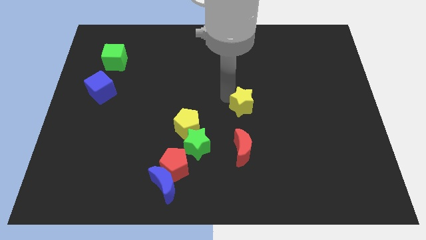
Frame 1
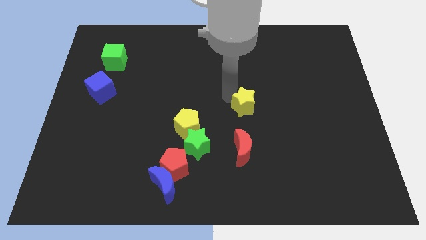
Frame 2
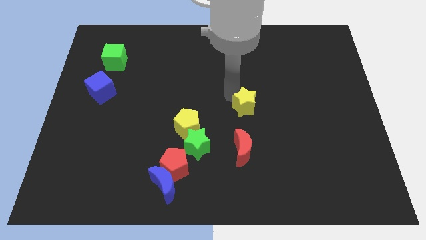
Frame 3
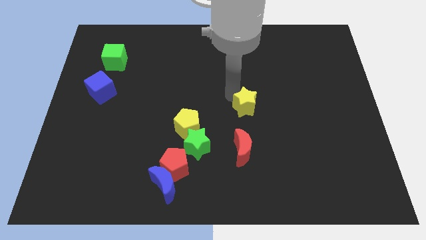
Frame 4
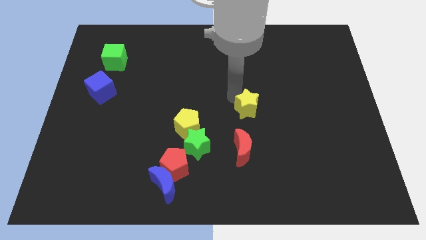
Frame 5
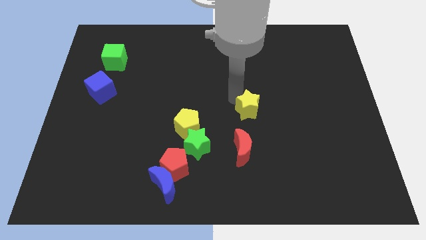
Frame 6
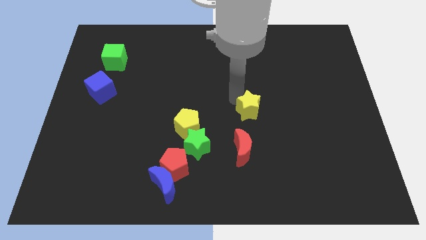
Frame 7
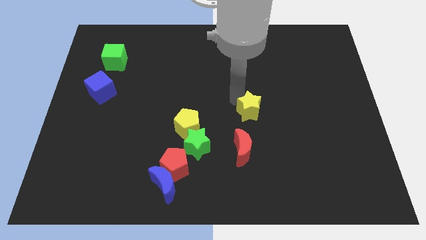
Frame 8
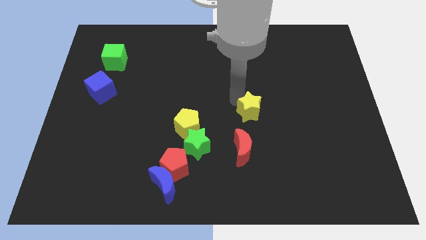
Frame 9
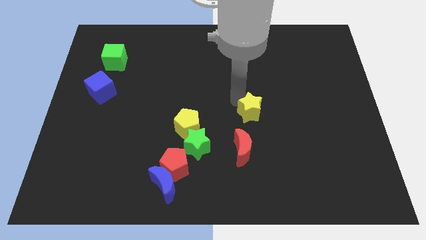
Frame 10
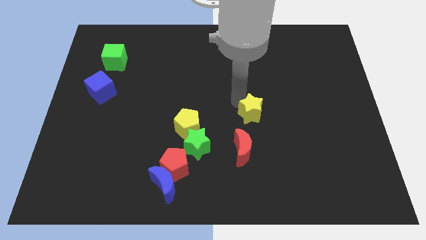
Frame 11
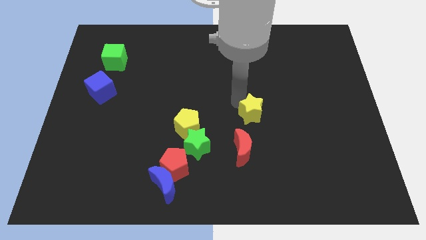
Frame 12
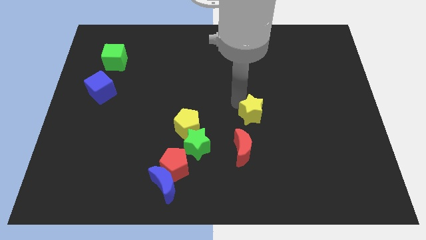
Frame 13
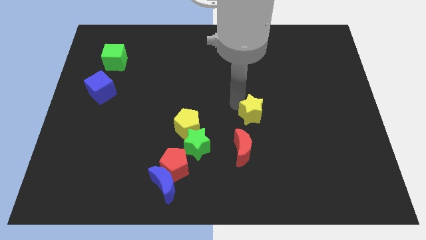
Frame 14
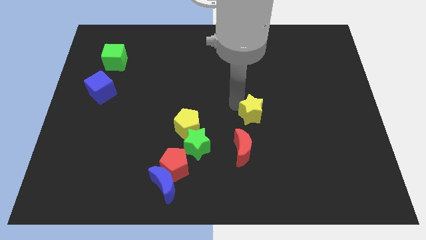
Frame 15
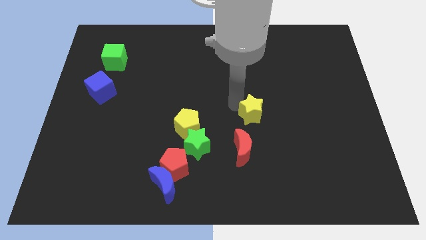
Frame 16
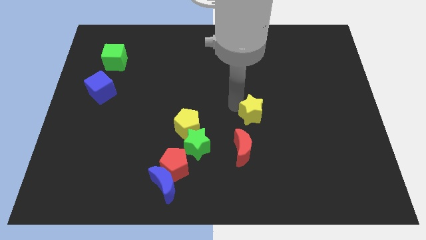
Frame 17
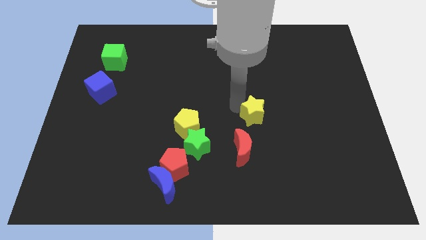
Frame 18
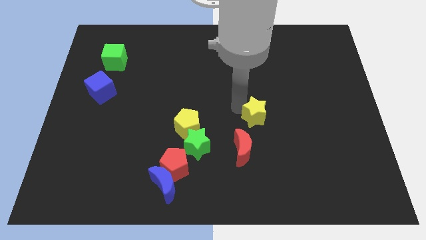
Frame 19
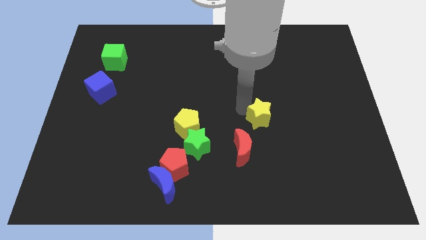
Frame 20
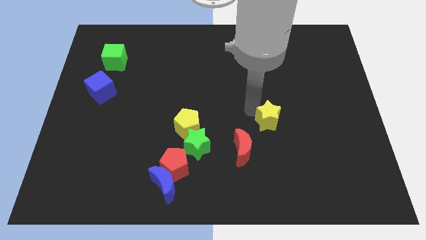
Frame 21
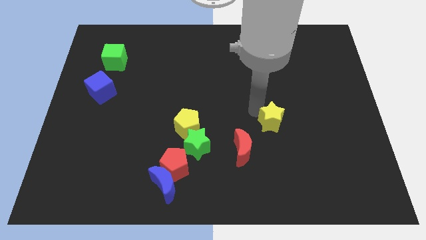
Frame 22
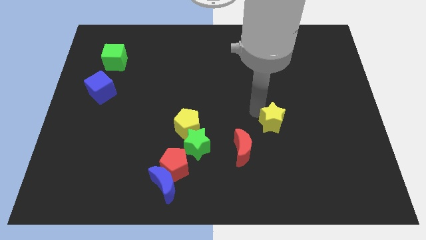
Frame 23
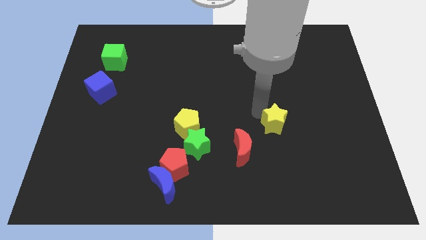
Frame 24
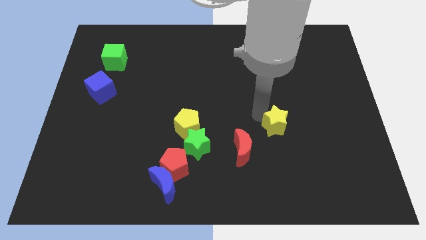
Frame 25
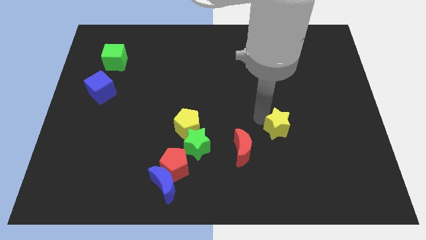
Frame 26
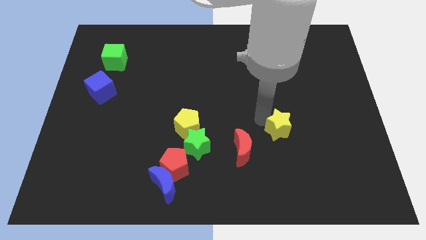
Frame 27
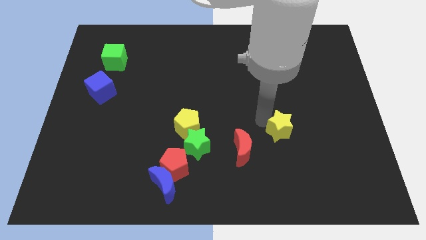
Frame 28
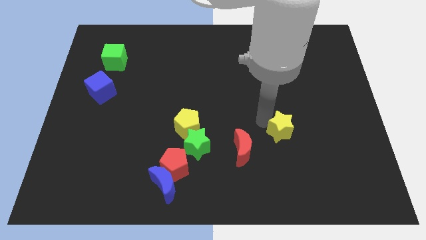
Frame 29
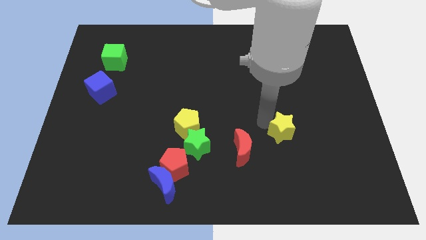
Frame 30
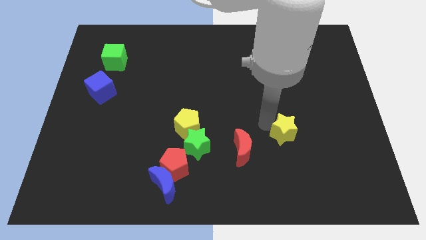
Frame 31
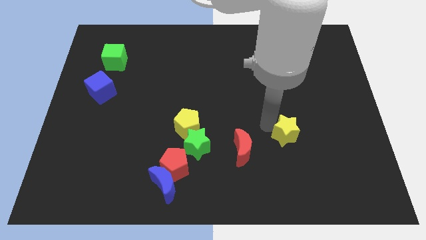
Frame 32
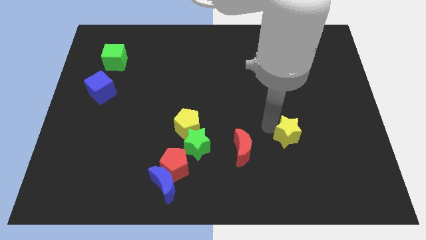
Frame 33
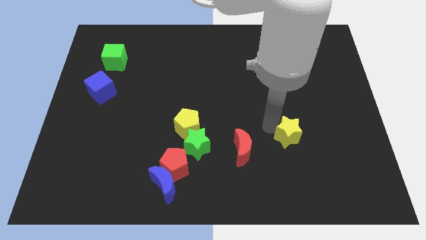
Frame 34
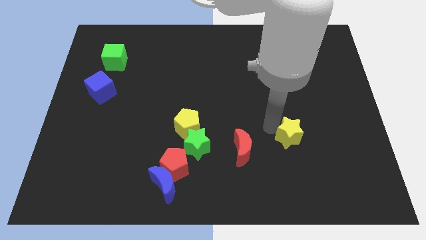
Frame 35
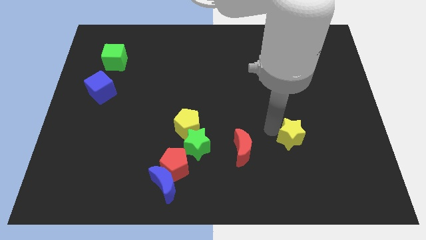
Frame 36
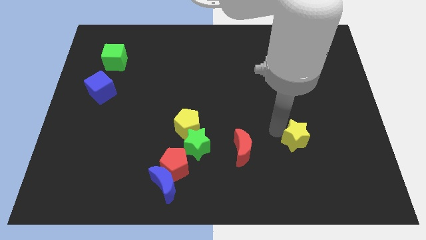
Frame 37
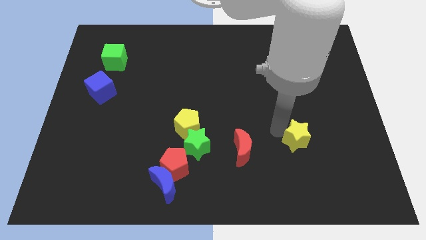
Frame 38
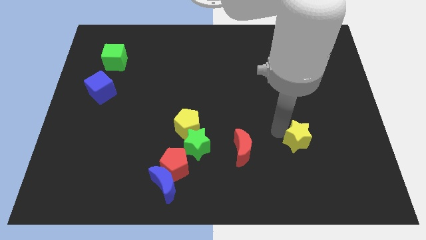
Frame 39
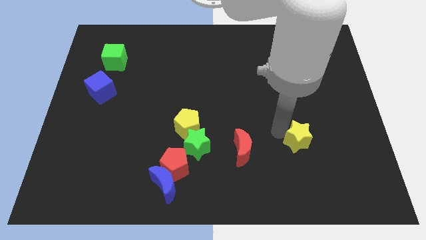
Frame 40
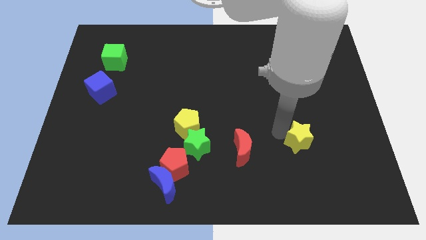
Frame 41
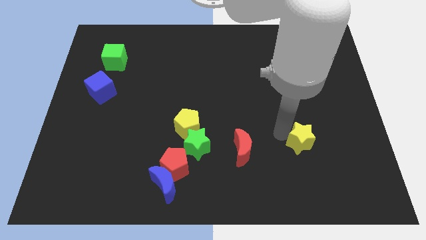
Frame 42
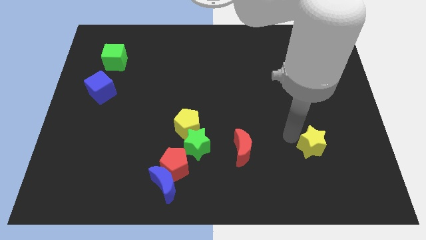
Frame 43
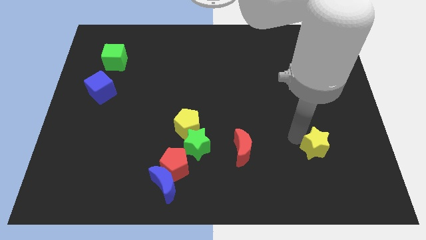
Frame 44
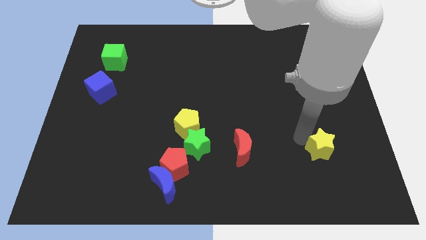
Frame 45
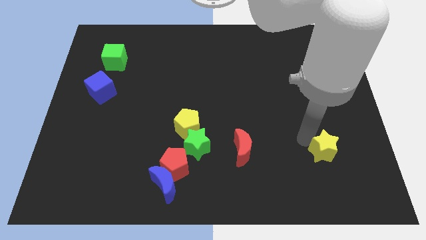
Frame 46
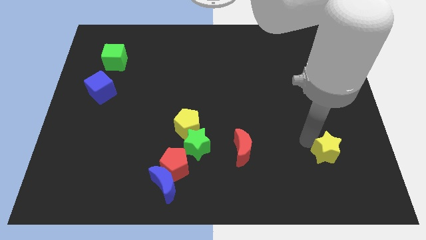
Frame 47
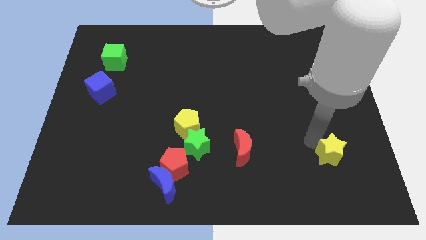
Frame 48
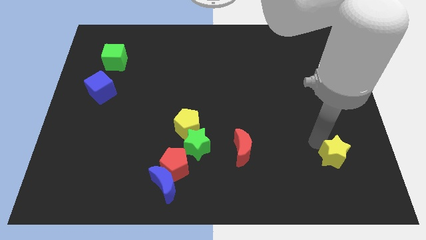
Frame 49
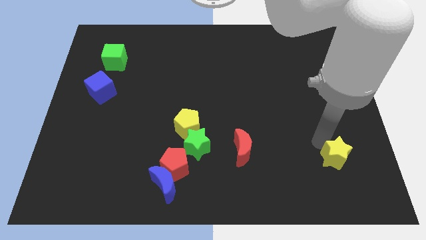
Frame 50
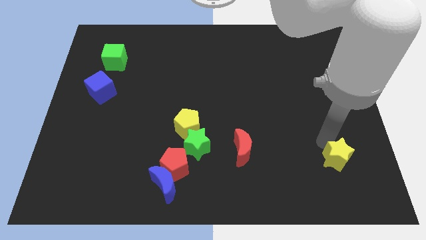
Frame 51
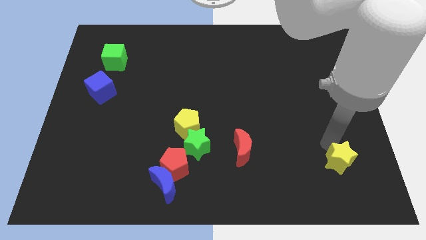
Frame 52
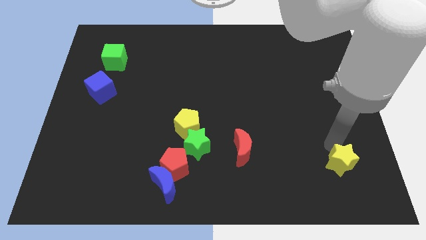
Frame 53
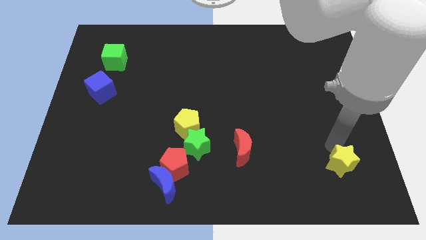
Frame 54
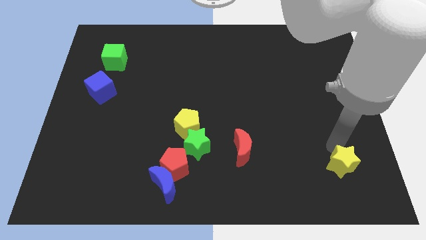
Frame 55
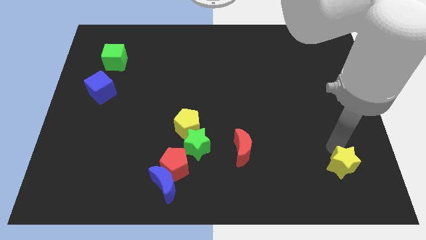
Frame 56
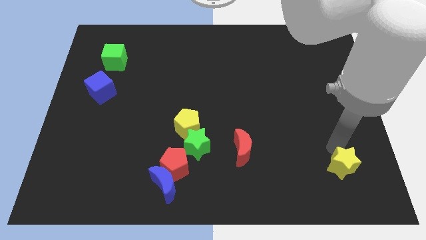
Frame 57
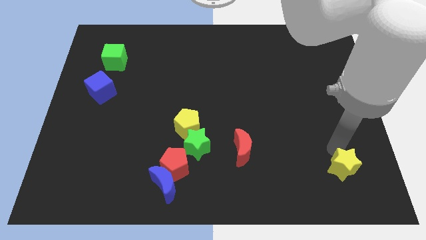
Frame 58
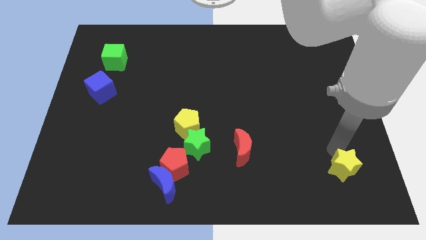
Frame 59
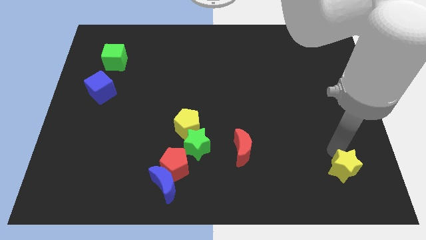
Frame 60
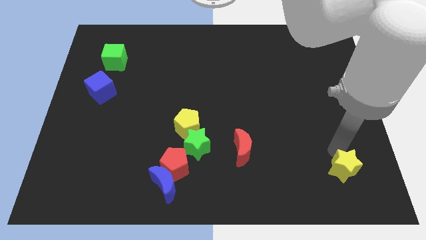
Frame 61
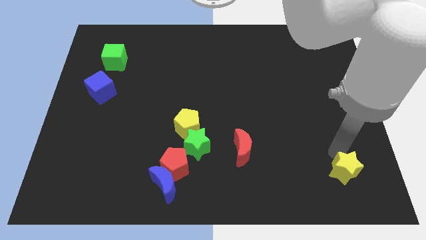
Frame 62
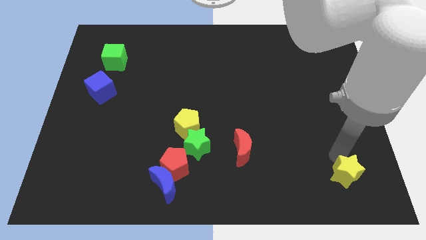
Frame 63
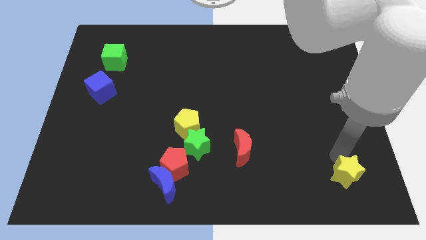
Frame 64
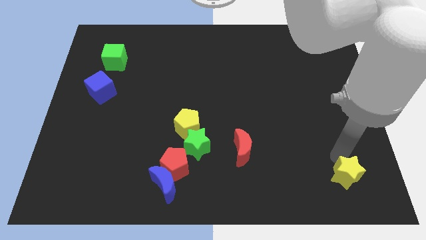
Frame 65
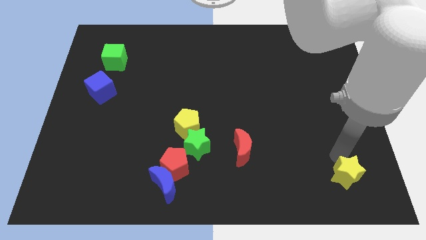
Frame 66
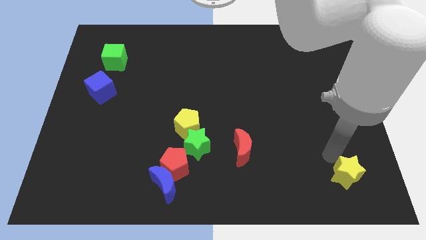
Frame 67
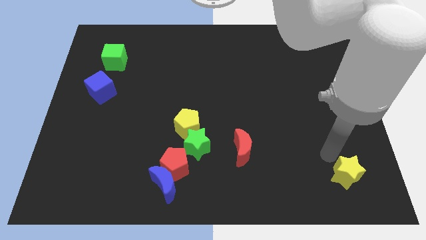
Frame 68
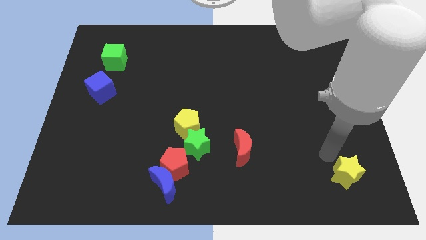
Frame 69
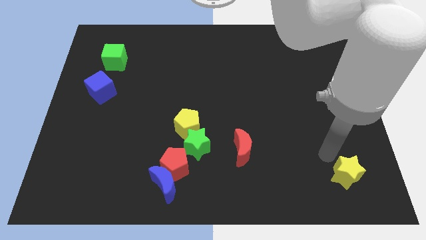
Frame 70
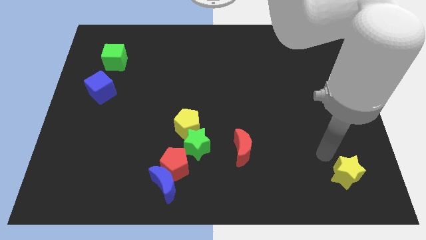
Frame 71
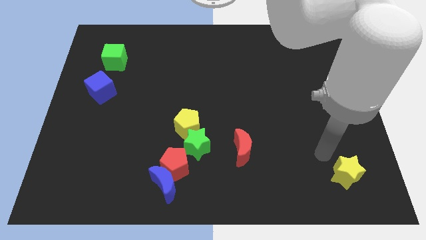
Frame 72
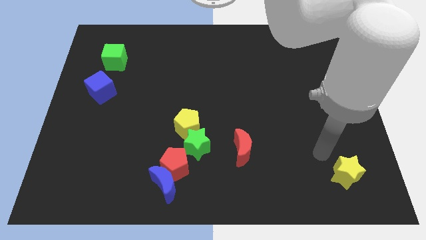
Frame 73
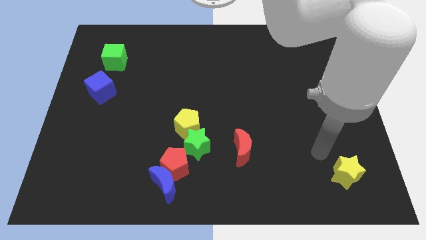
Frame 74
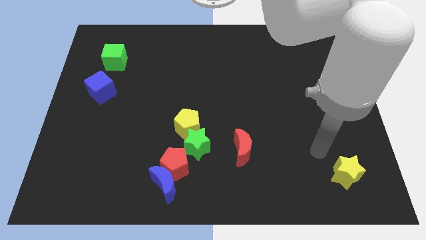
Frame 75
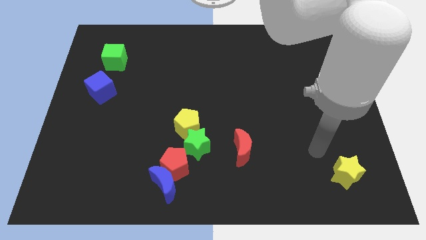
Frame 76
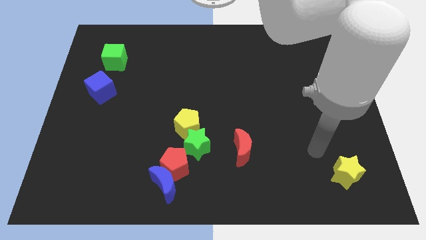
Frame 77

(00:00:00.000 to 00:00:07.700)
push the yellow star to the bottom right of the board

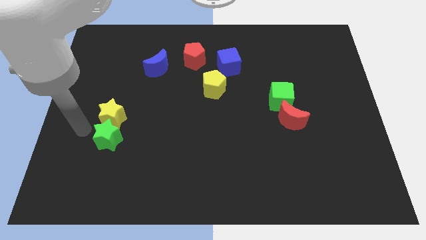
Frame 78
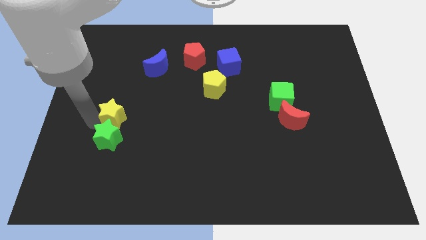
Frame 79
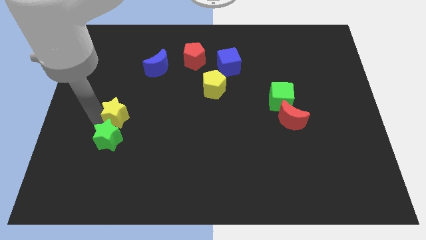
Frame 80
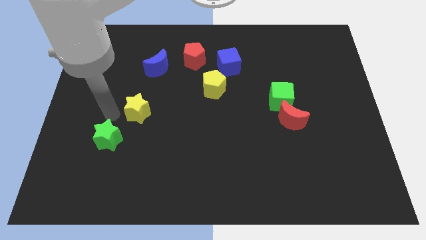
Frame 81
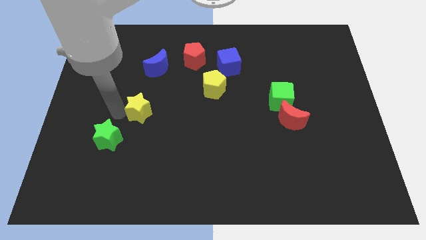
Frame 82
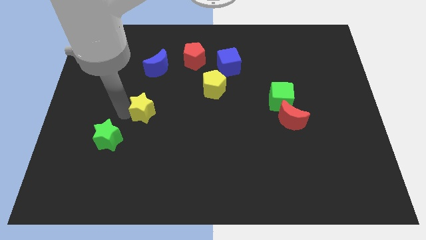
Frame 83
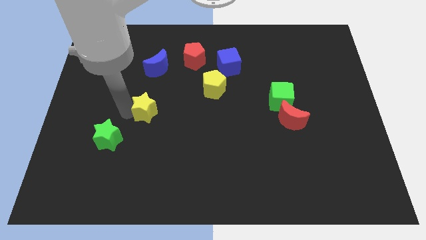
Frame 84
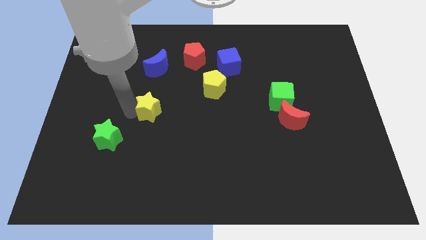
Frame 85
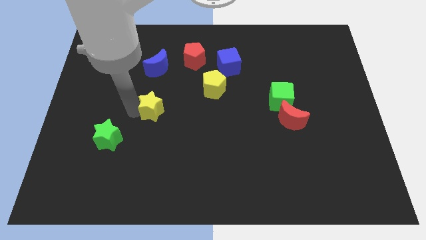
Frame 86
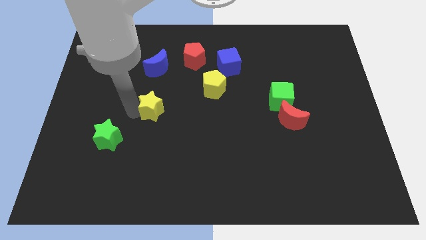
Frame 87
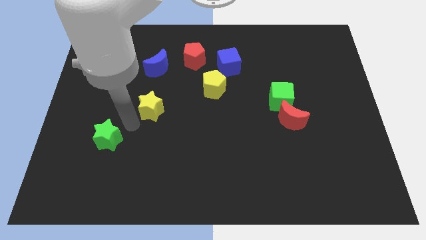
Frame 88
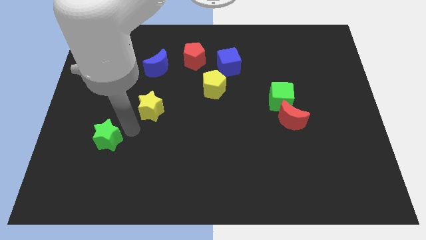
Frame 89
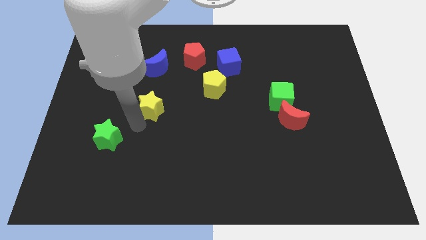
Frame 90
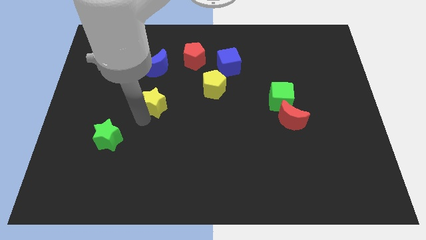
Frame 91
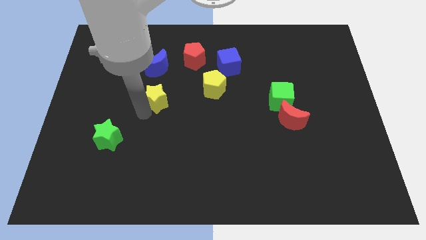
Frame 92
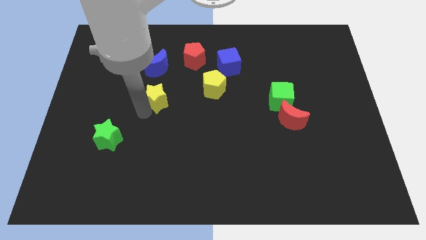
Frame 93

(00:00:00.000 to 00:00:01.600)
separate the yellow star from the green star
